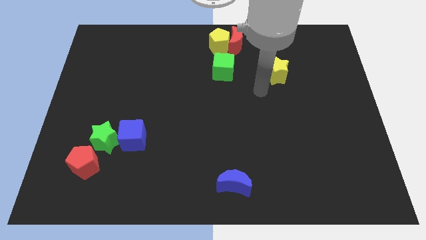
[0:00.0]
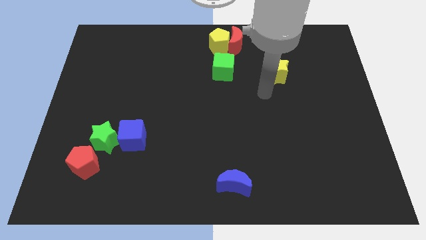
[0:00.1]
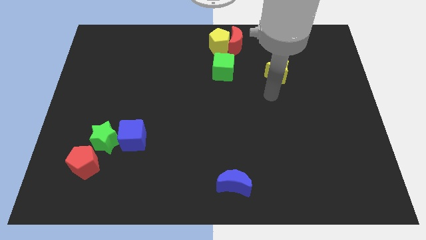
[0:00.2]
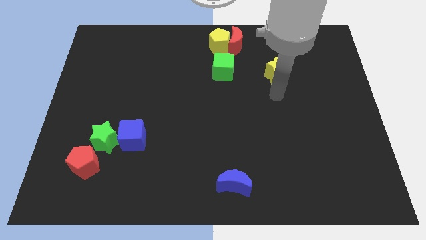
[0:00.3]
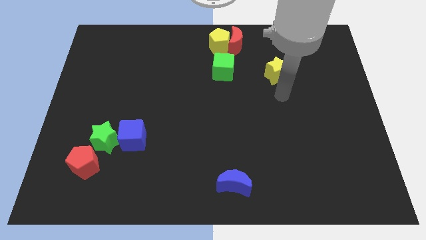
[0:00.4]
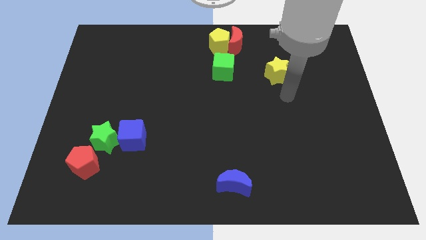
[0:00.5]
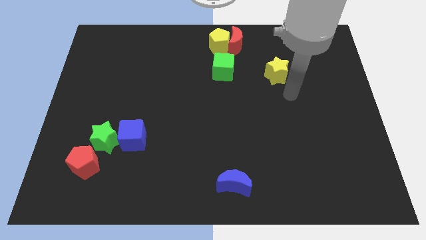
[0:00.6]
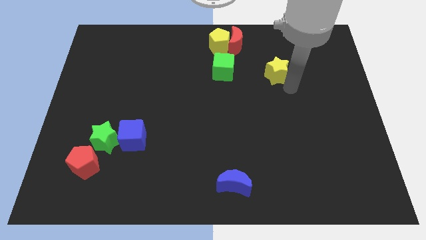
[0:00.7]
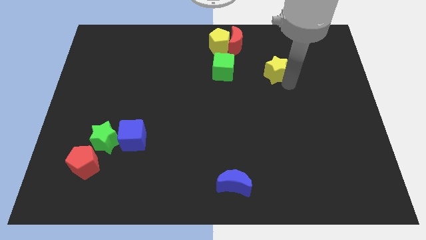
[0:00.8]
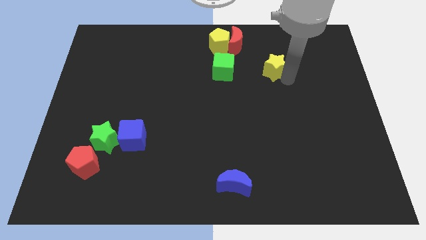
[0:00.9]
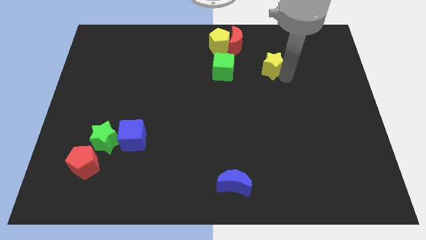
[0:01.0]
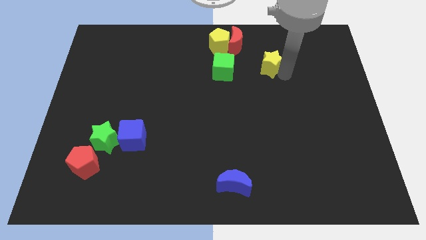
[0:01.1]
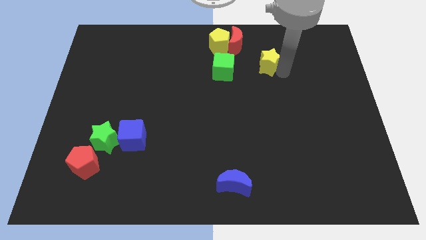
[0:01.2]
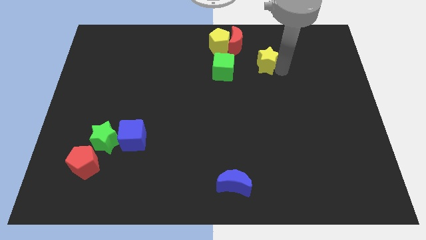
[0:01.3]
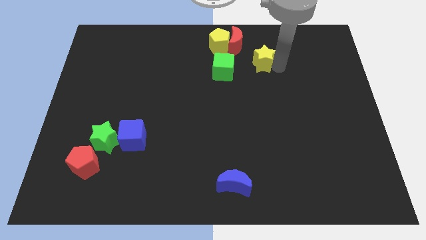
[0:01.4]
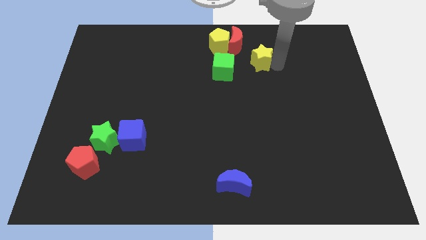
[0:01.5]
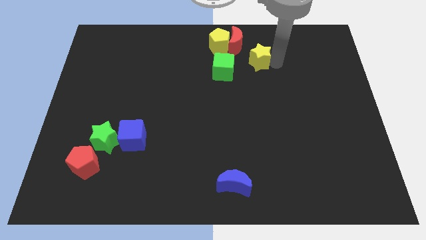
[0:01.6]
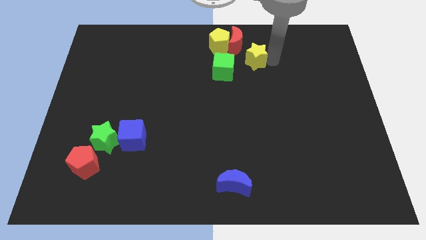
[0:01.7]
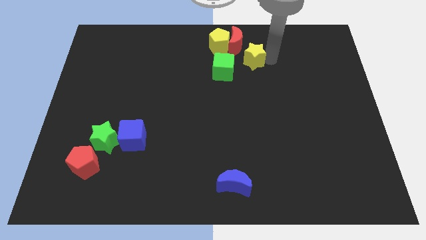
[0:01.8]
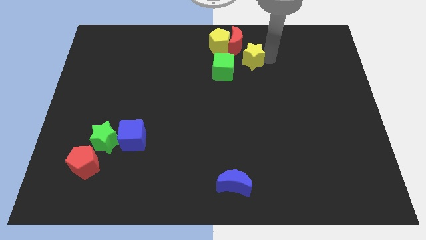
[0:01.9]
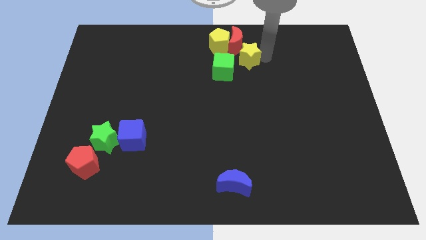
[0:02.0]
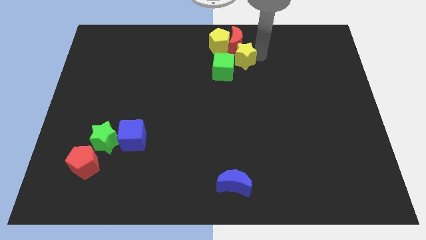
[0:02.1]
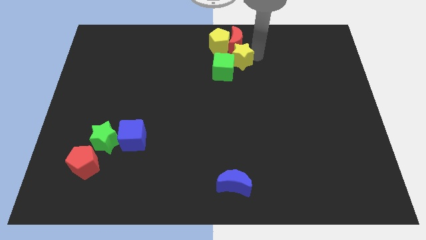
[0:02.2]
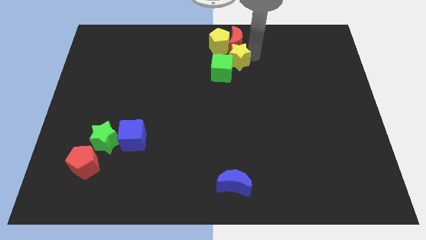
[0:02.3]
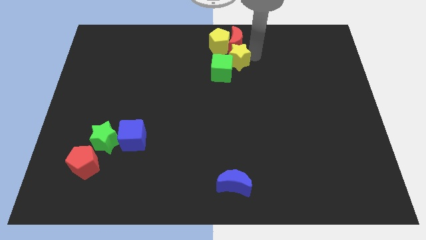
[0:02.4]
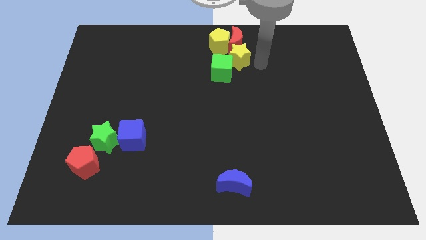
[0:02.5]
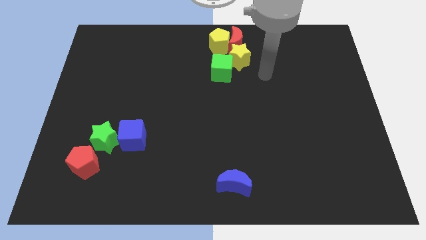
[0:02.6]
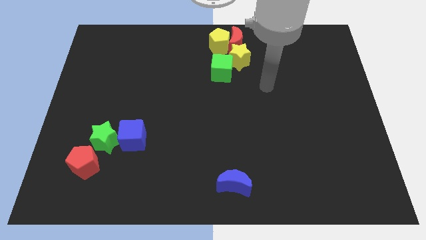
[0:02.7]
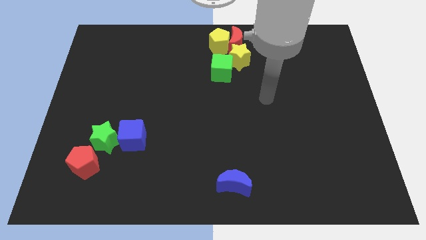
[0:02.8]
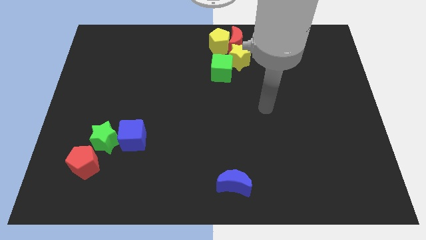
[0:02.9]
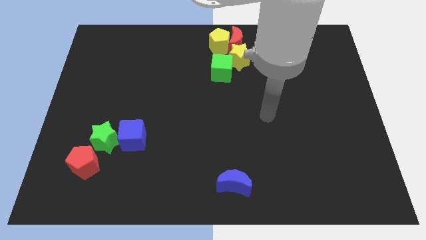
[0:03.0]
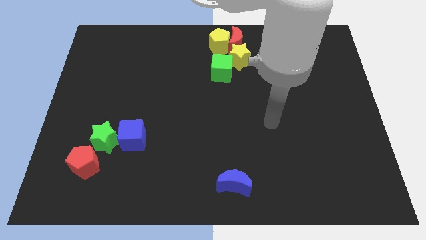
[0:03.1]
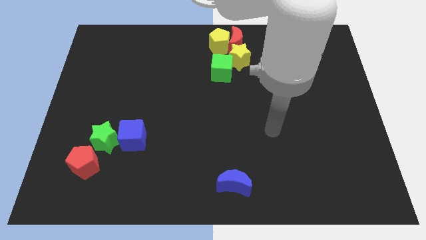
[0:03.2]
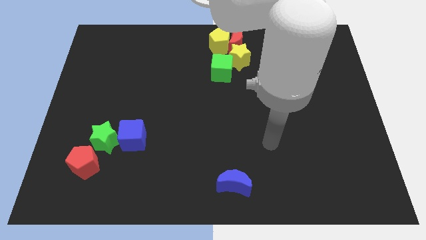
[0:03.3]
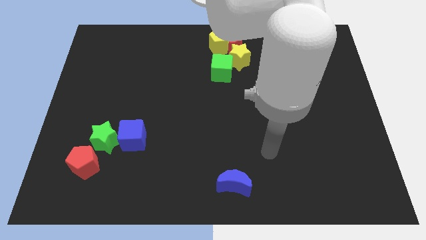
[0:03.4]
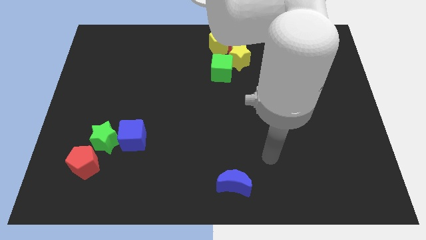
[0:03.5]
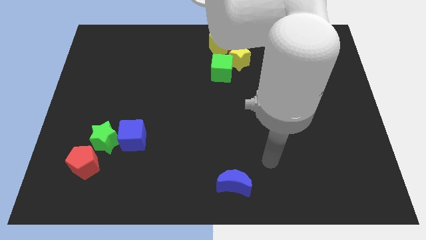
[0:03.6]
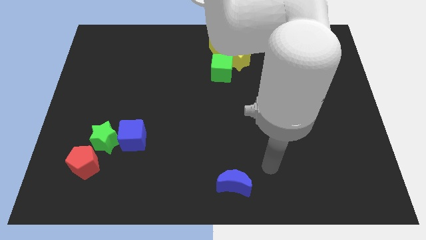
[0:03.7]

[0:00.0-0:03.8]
move the yellow star close to the green cube and red moon

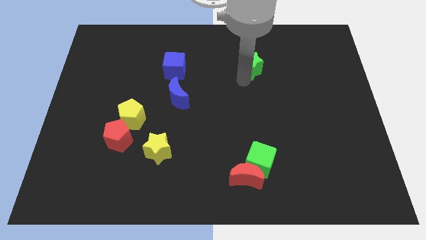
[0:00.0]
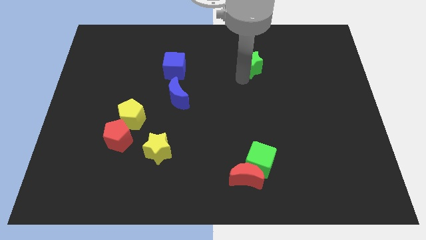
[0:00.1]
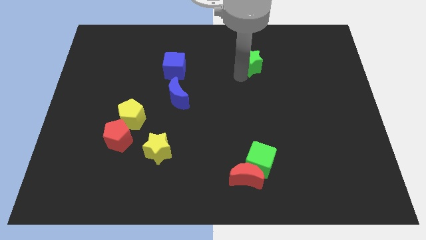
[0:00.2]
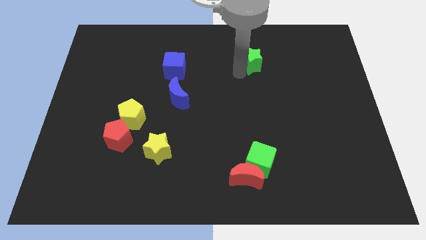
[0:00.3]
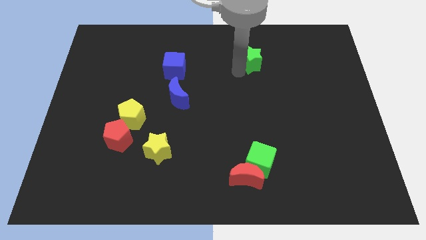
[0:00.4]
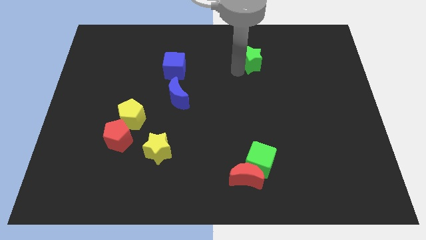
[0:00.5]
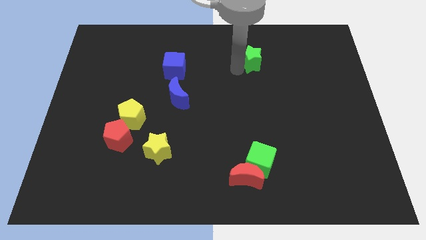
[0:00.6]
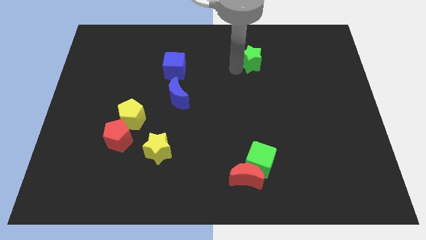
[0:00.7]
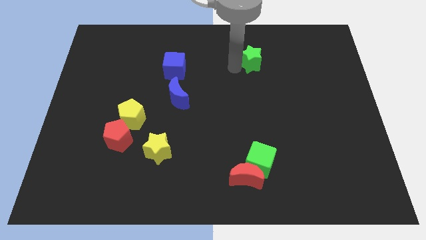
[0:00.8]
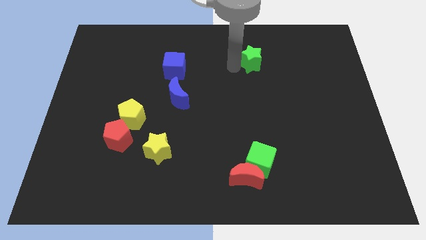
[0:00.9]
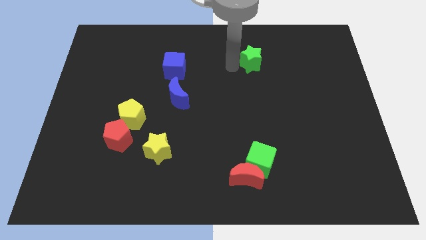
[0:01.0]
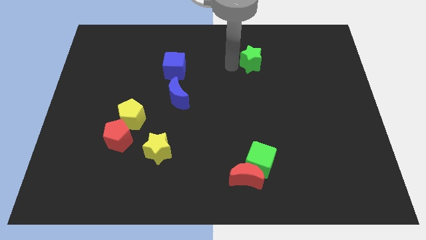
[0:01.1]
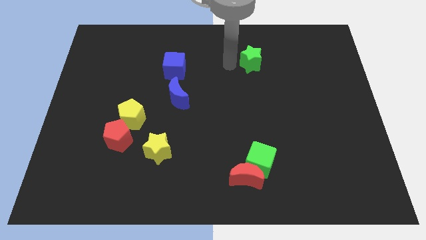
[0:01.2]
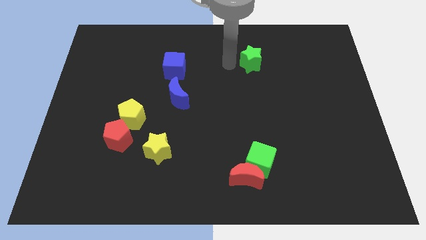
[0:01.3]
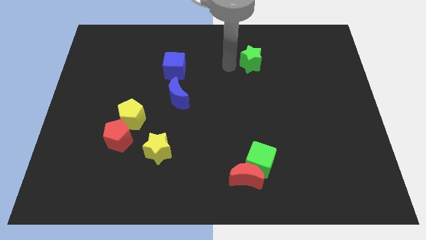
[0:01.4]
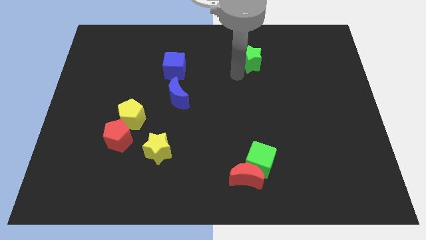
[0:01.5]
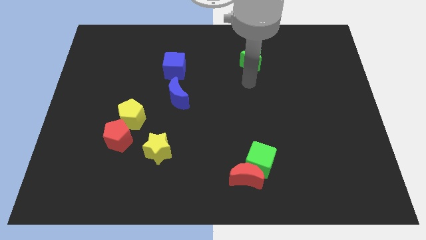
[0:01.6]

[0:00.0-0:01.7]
slightly push the green star to the right of the board

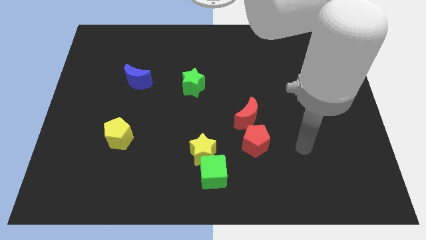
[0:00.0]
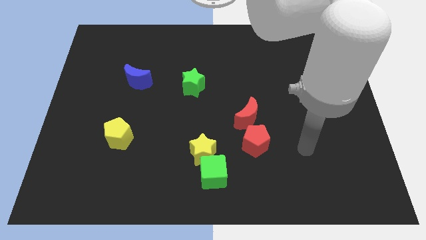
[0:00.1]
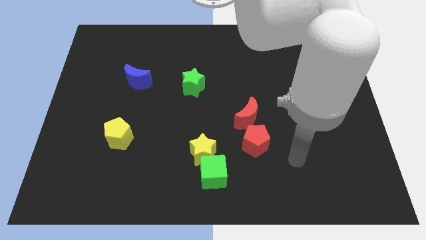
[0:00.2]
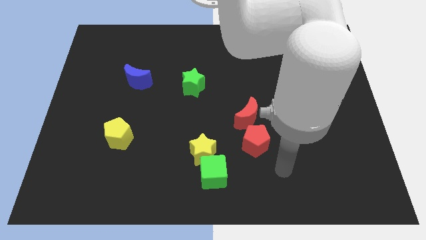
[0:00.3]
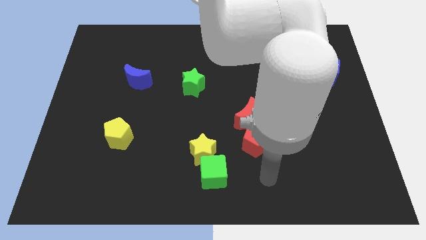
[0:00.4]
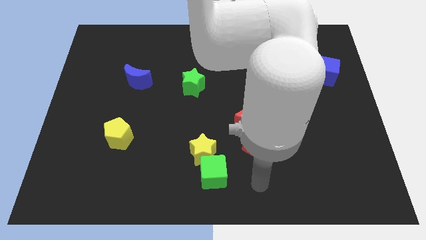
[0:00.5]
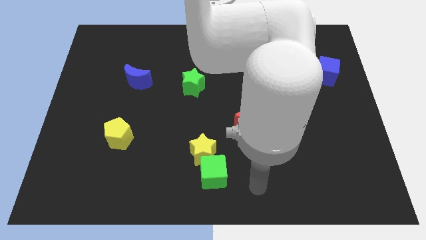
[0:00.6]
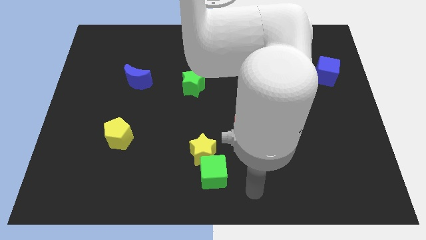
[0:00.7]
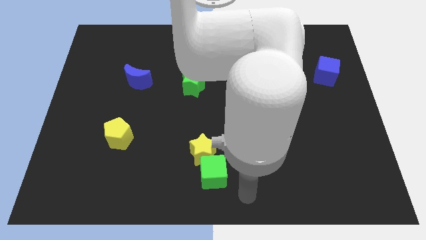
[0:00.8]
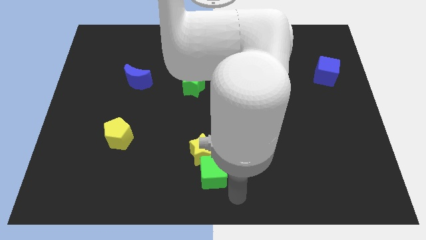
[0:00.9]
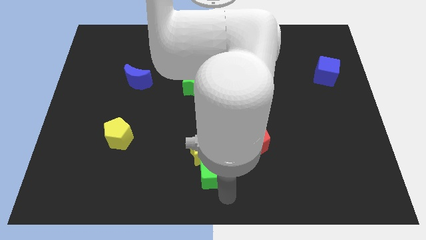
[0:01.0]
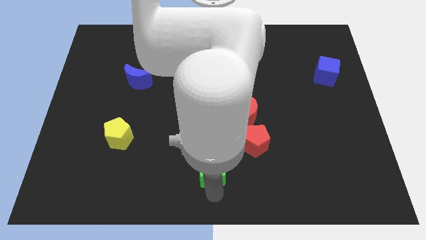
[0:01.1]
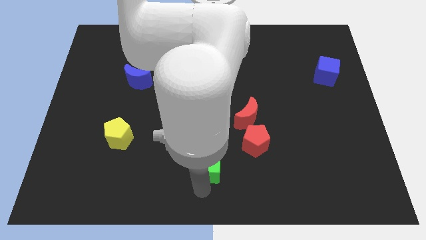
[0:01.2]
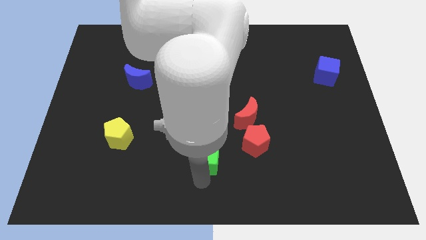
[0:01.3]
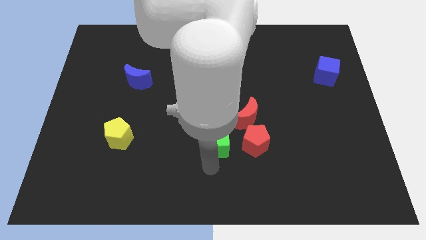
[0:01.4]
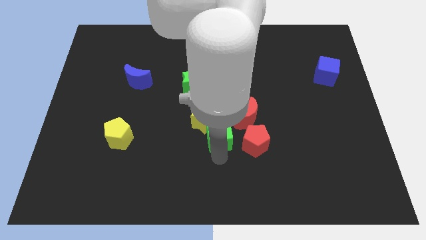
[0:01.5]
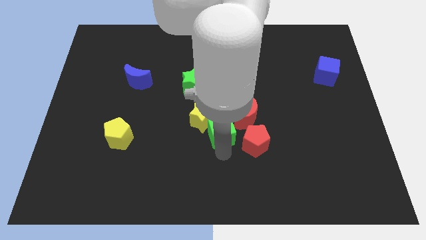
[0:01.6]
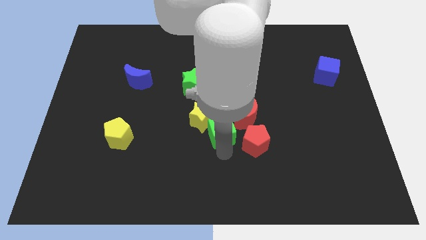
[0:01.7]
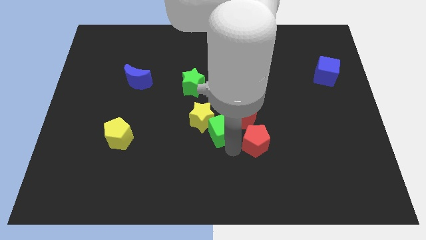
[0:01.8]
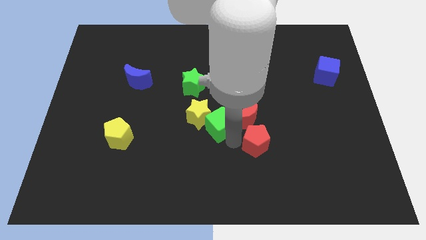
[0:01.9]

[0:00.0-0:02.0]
push the green cube along with the yellow star to the center

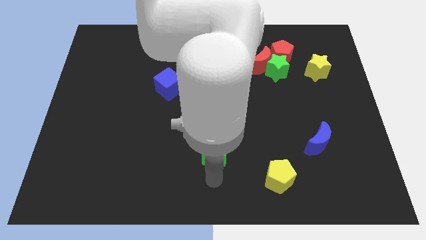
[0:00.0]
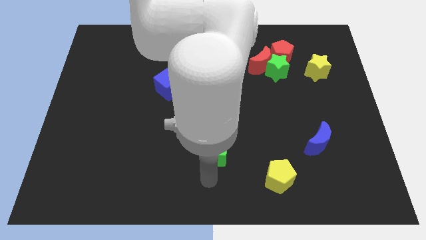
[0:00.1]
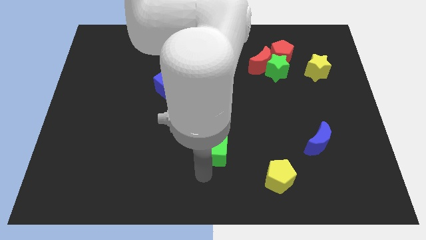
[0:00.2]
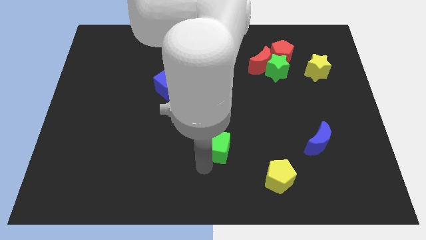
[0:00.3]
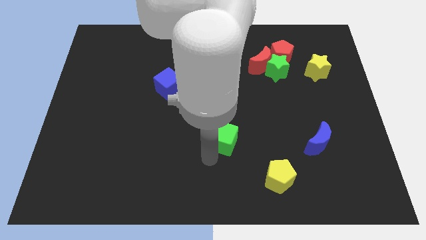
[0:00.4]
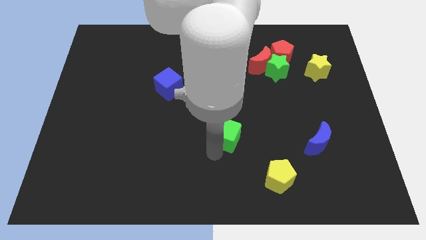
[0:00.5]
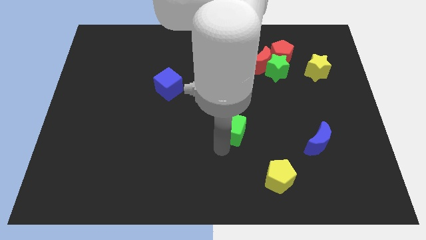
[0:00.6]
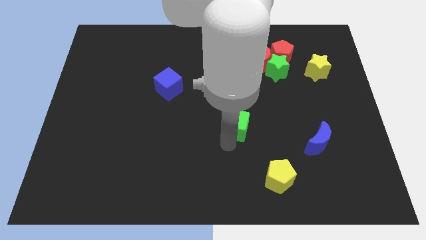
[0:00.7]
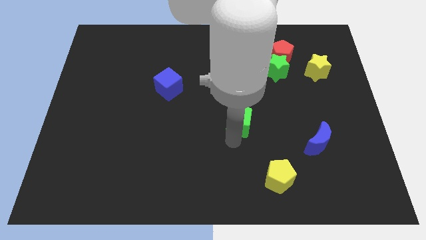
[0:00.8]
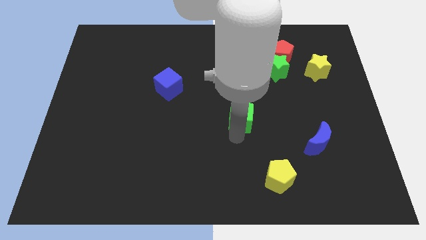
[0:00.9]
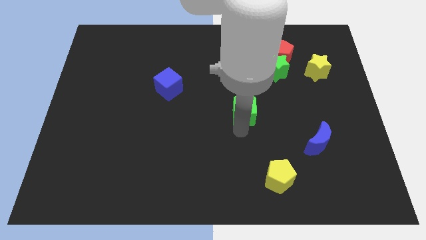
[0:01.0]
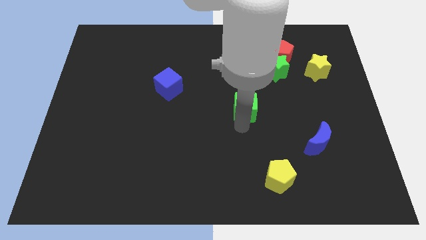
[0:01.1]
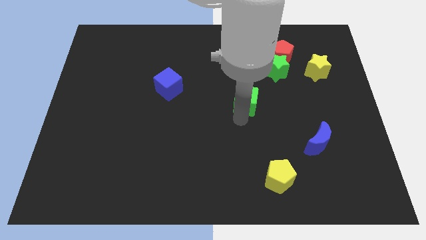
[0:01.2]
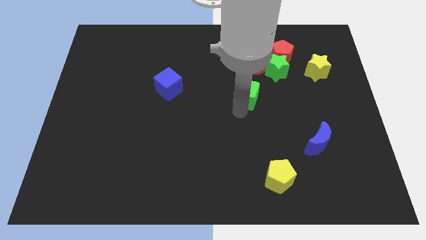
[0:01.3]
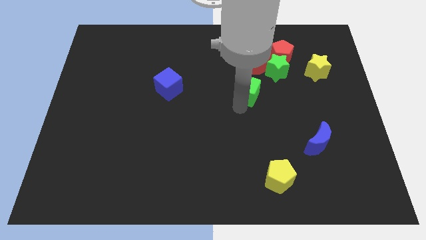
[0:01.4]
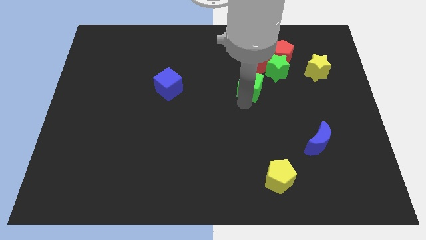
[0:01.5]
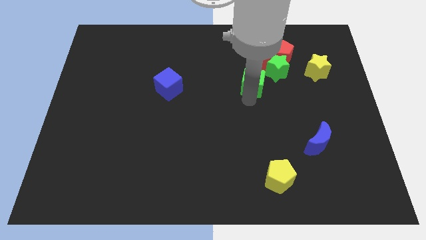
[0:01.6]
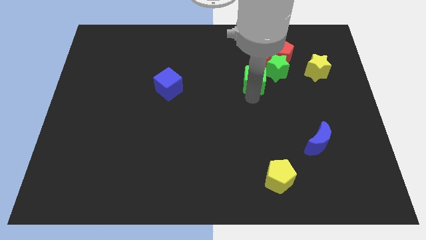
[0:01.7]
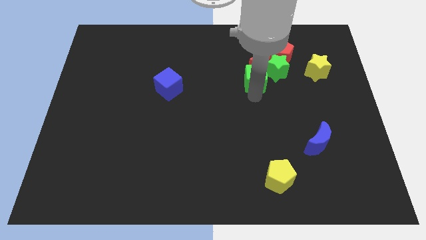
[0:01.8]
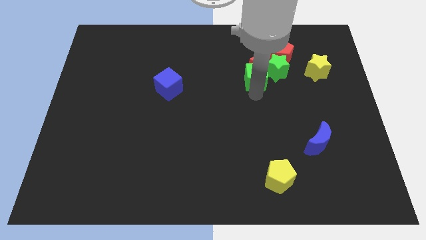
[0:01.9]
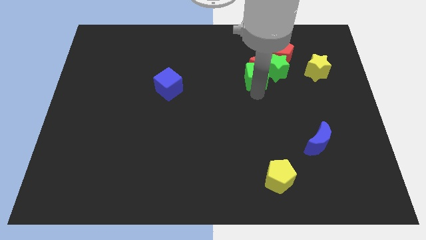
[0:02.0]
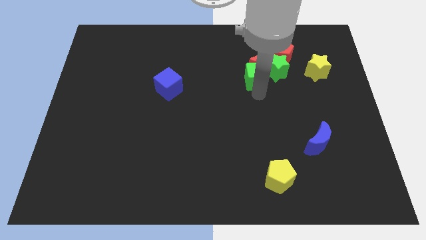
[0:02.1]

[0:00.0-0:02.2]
push green cube into red moon
